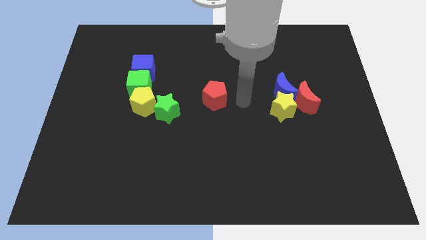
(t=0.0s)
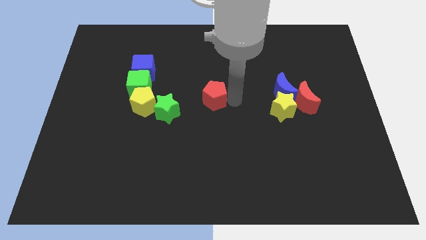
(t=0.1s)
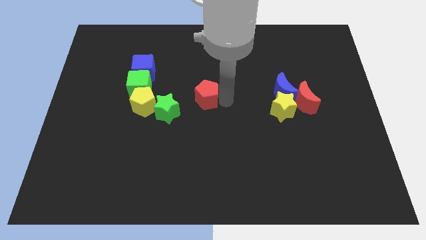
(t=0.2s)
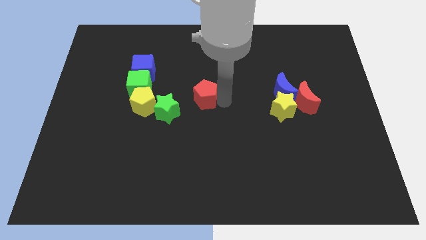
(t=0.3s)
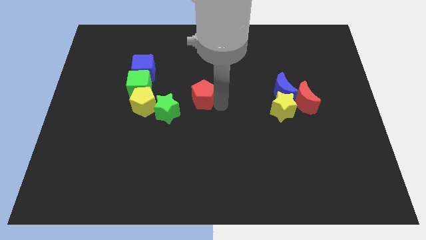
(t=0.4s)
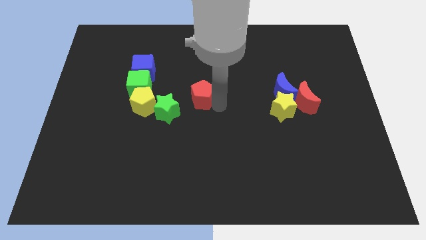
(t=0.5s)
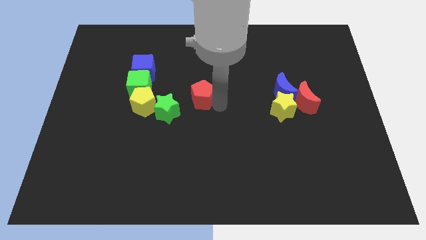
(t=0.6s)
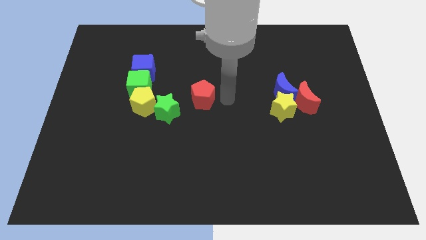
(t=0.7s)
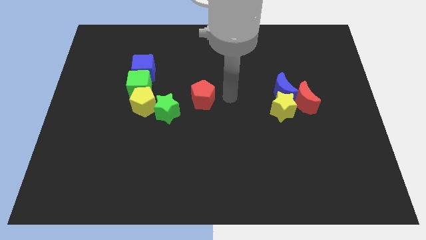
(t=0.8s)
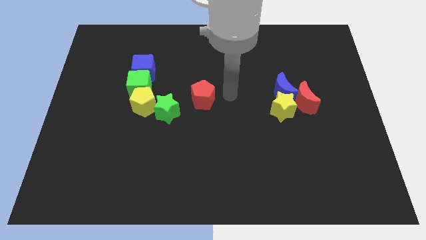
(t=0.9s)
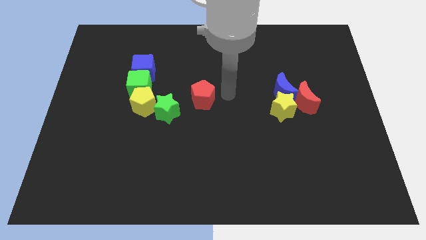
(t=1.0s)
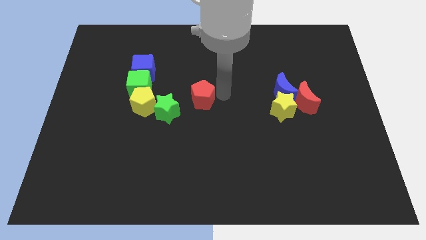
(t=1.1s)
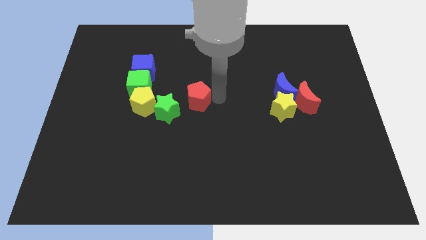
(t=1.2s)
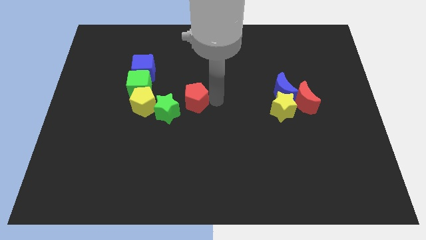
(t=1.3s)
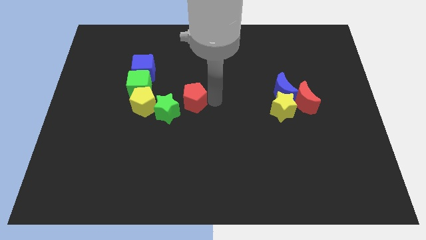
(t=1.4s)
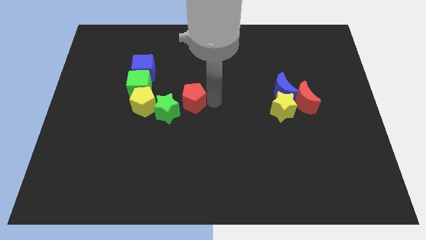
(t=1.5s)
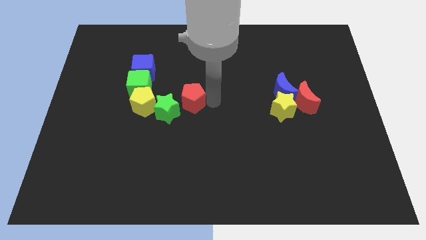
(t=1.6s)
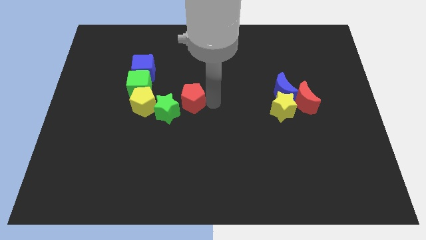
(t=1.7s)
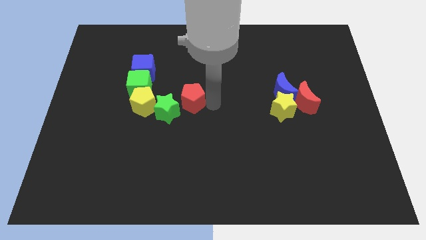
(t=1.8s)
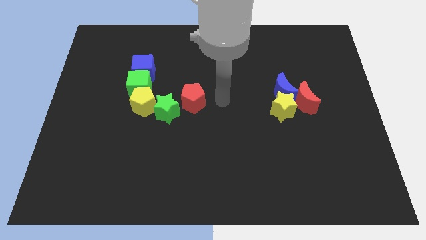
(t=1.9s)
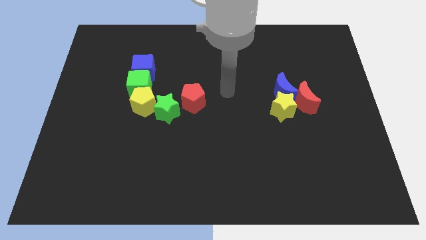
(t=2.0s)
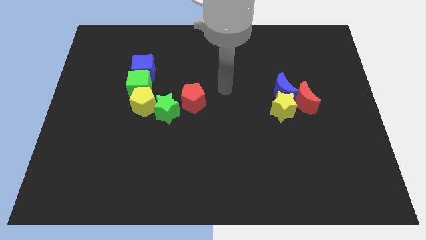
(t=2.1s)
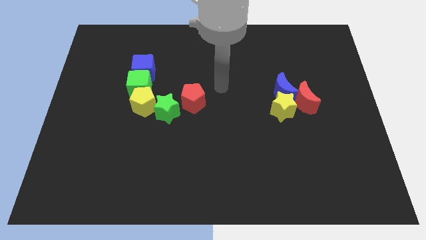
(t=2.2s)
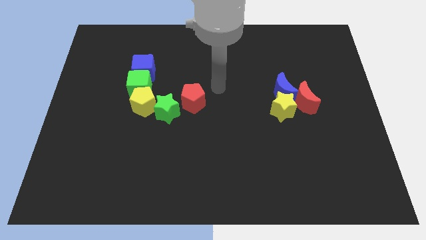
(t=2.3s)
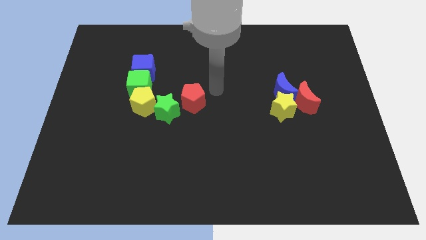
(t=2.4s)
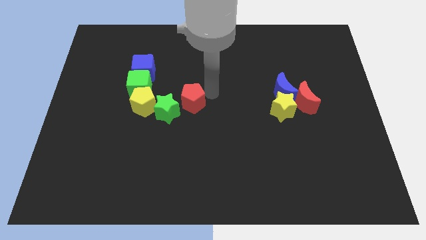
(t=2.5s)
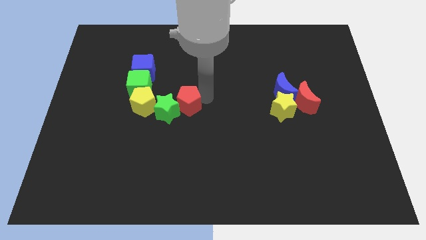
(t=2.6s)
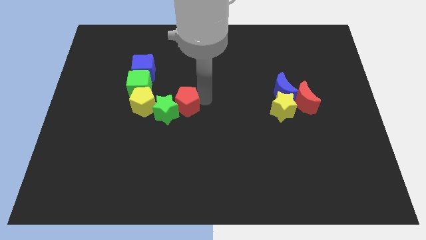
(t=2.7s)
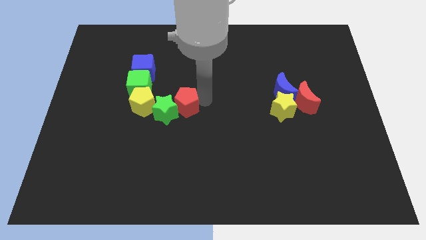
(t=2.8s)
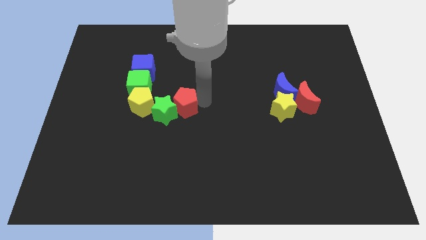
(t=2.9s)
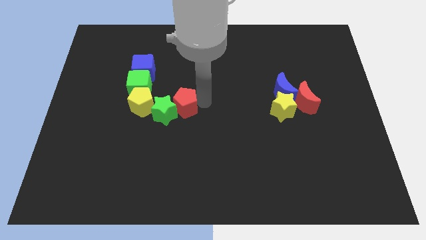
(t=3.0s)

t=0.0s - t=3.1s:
push the red pentagon into the right side of the green star

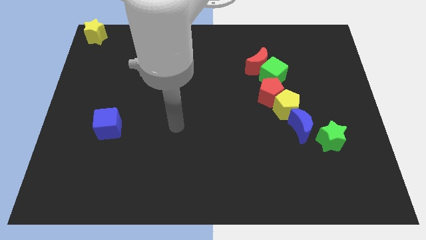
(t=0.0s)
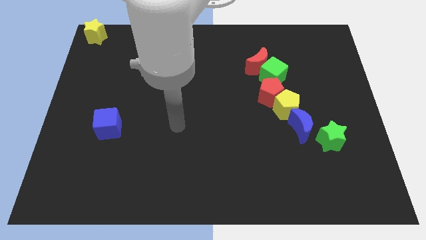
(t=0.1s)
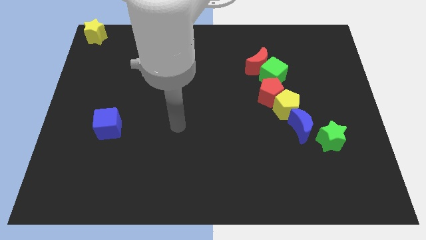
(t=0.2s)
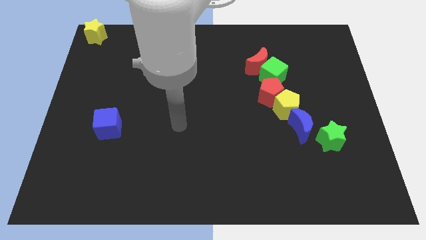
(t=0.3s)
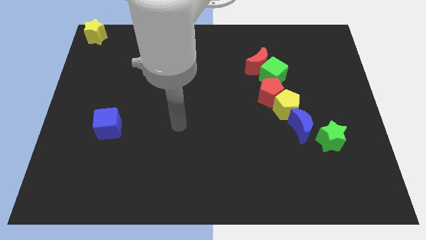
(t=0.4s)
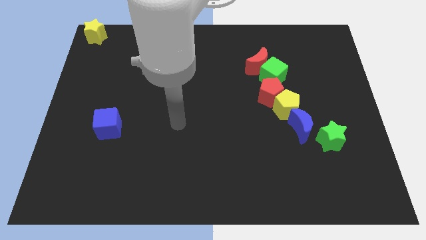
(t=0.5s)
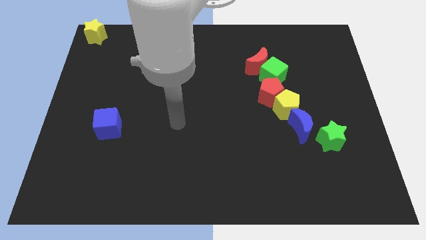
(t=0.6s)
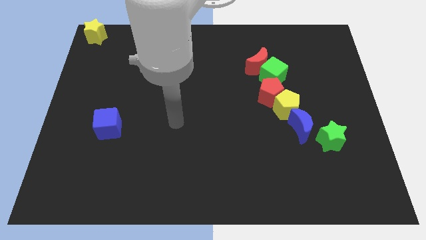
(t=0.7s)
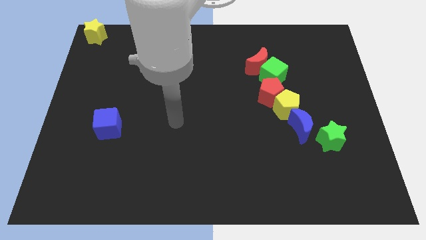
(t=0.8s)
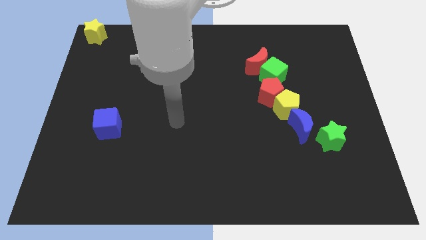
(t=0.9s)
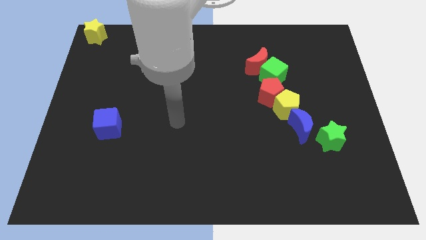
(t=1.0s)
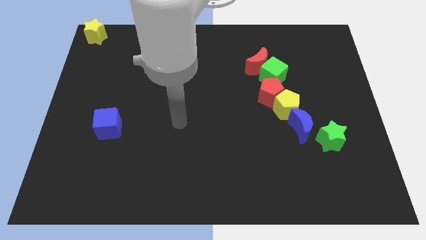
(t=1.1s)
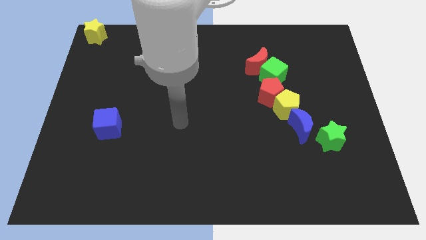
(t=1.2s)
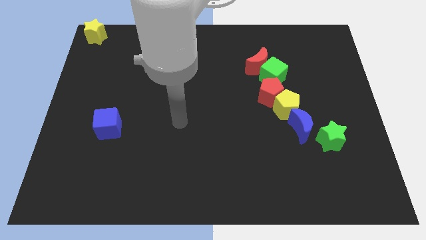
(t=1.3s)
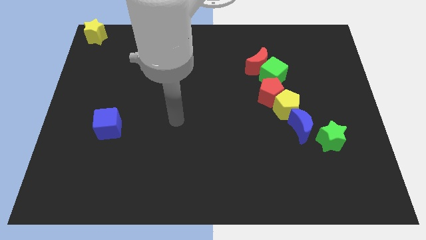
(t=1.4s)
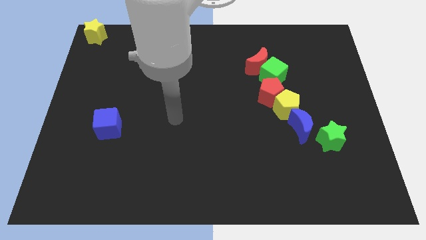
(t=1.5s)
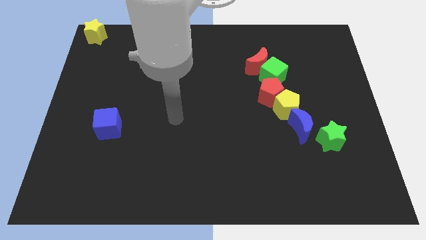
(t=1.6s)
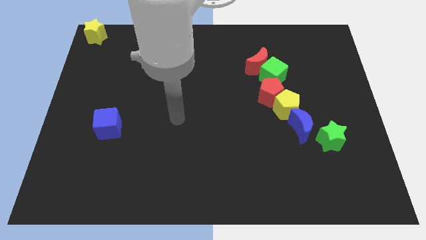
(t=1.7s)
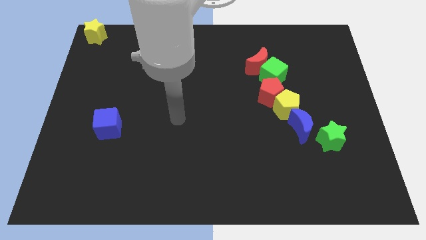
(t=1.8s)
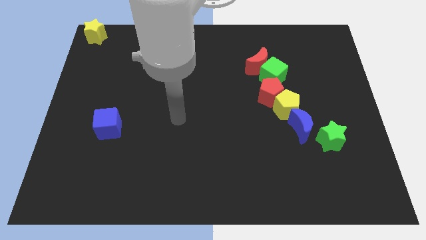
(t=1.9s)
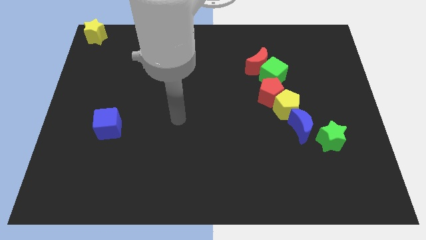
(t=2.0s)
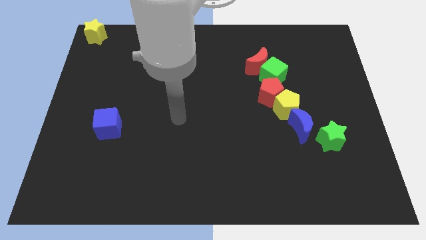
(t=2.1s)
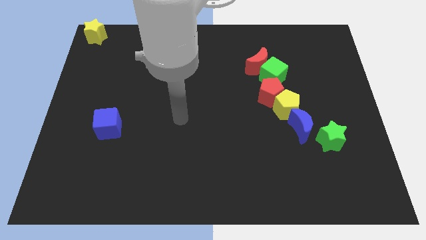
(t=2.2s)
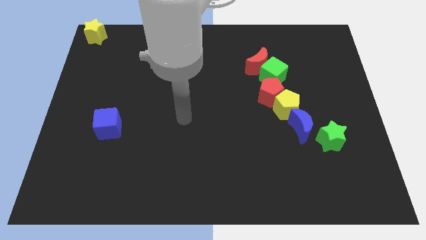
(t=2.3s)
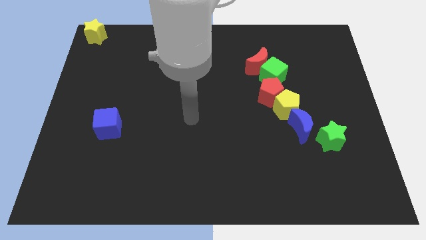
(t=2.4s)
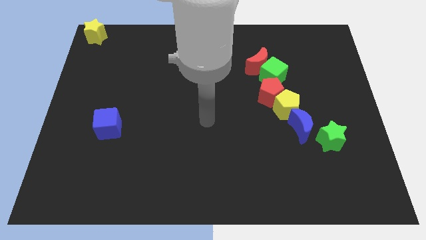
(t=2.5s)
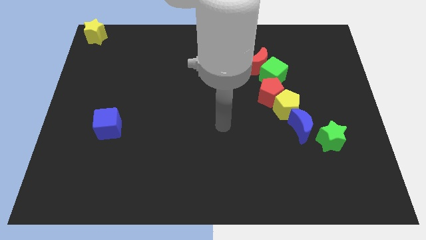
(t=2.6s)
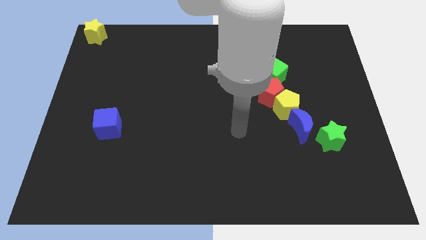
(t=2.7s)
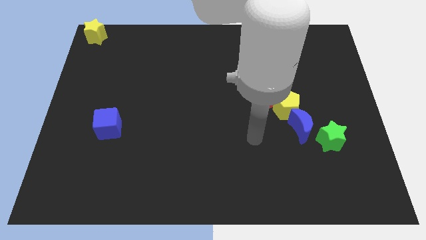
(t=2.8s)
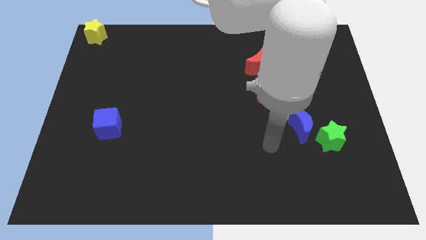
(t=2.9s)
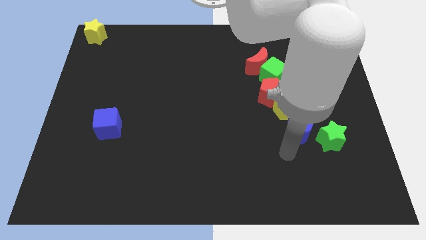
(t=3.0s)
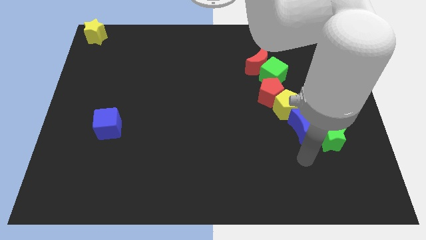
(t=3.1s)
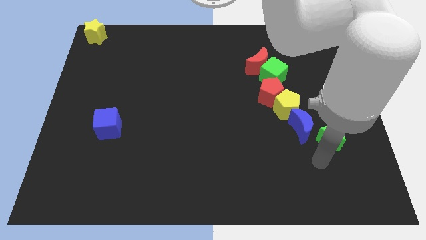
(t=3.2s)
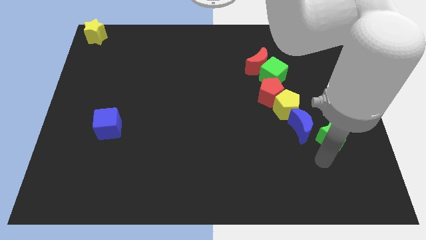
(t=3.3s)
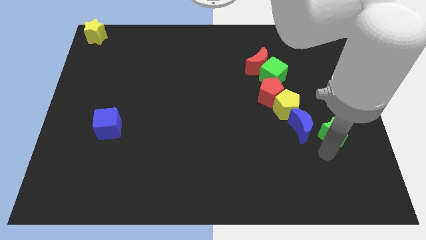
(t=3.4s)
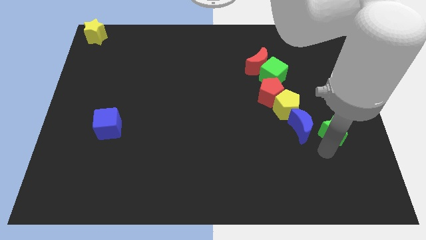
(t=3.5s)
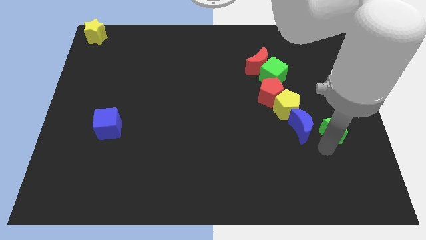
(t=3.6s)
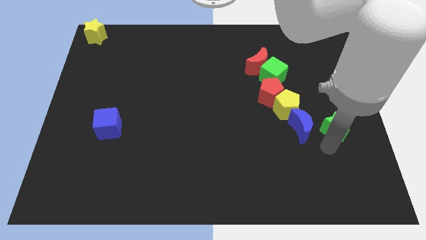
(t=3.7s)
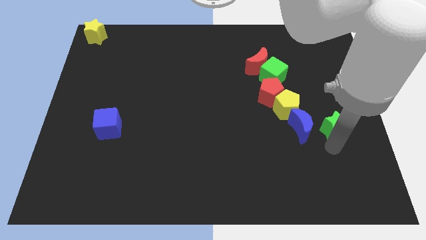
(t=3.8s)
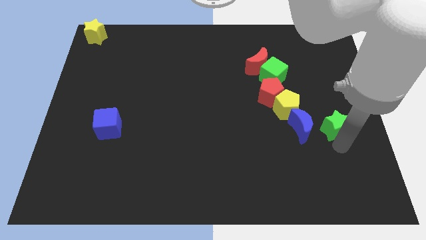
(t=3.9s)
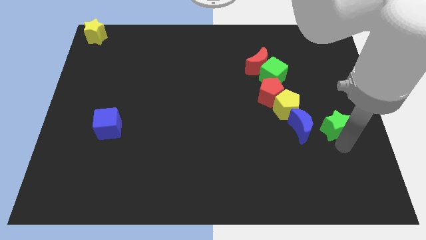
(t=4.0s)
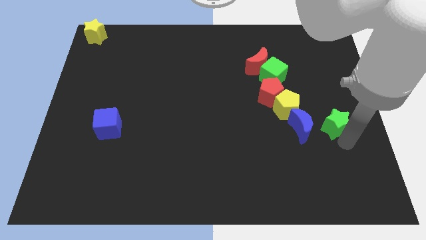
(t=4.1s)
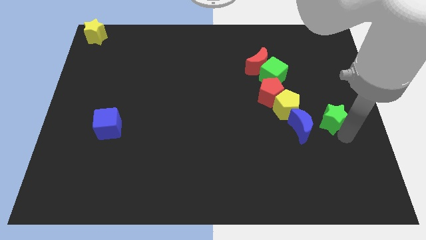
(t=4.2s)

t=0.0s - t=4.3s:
place the green star to the right of the blue moon

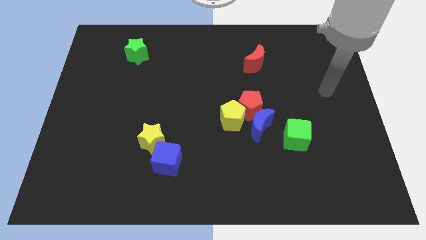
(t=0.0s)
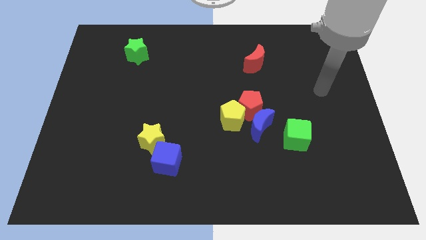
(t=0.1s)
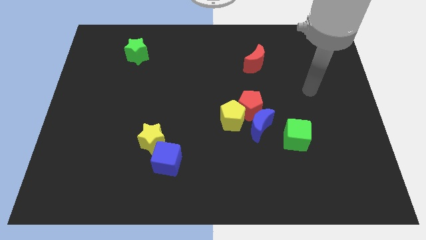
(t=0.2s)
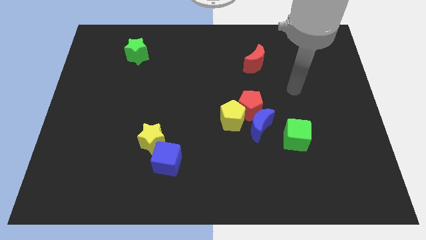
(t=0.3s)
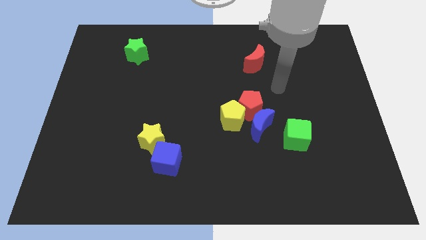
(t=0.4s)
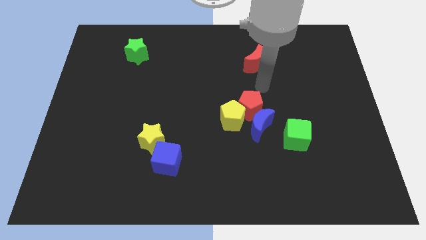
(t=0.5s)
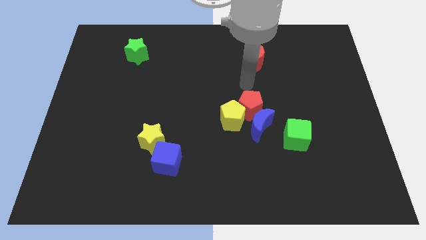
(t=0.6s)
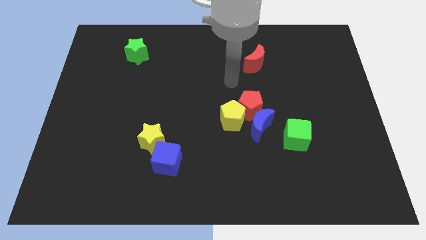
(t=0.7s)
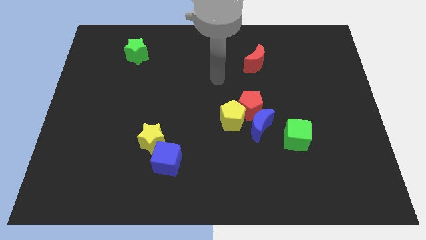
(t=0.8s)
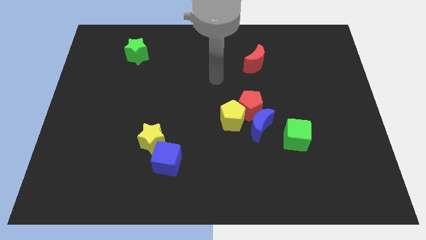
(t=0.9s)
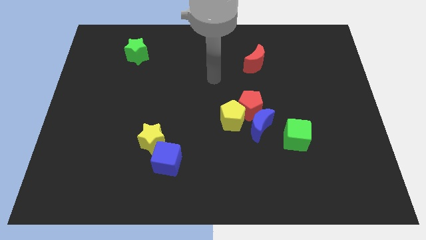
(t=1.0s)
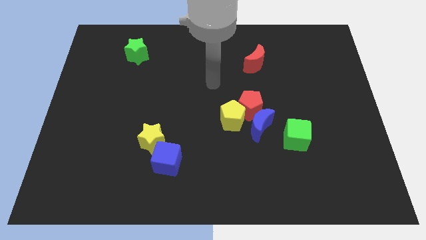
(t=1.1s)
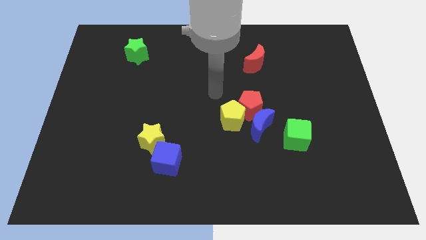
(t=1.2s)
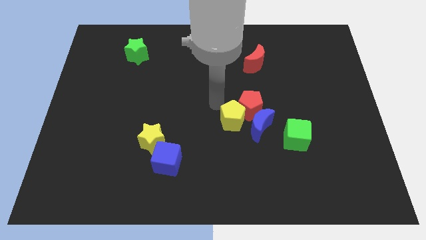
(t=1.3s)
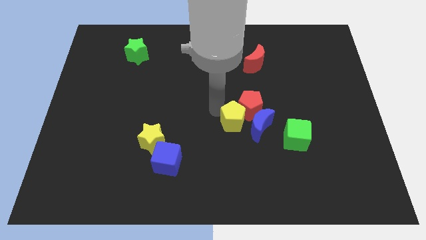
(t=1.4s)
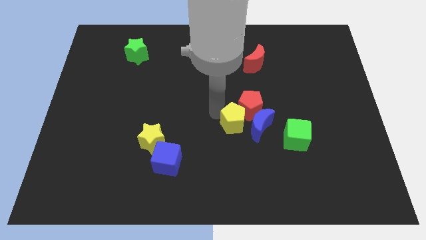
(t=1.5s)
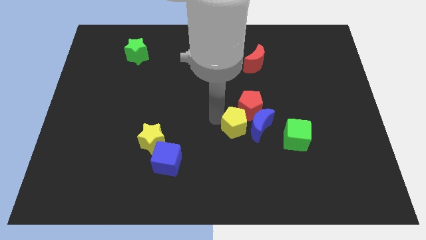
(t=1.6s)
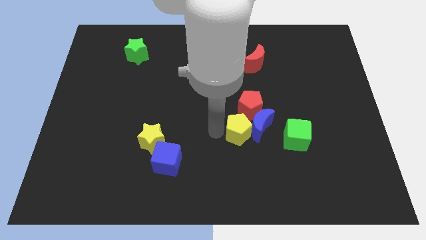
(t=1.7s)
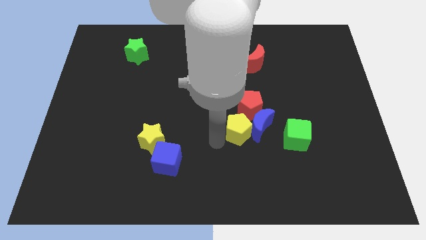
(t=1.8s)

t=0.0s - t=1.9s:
slightly move the yellow pentagon to the down
